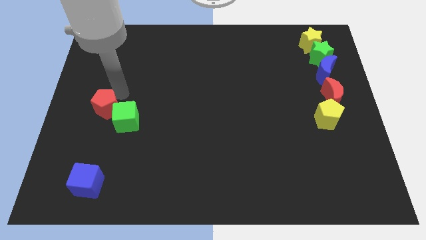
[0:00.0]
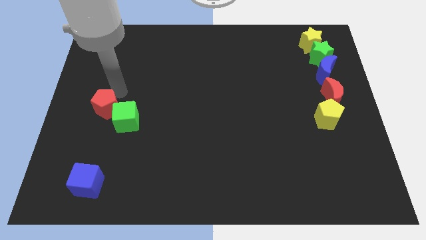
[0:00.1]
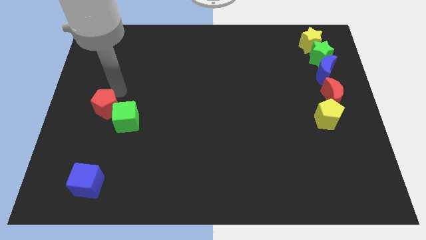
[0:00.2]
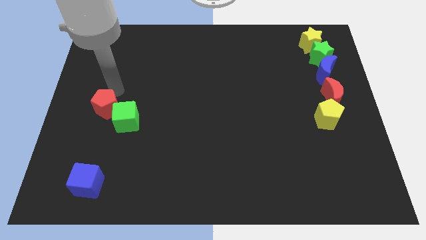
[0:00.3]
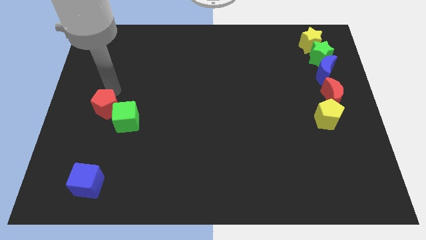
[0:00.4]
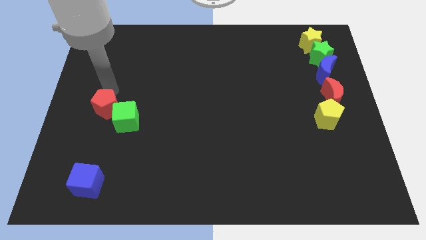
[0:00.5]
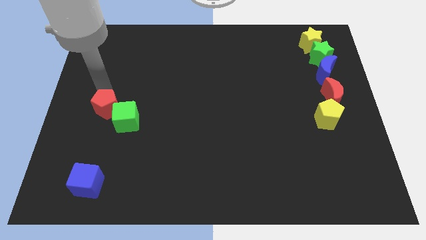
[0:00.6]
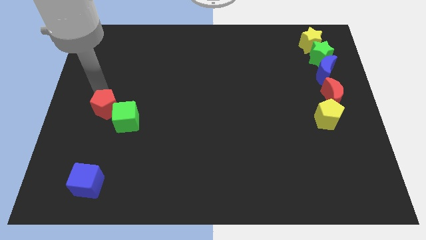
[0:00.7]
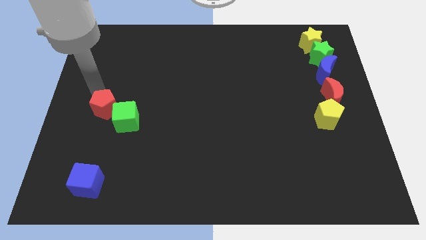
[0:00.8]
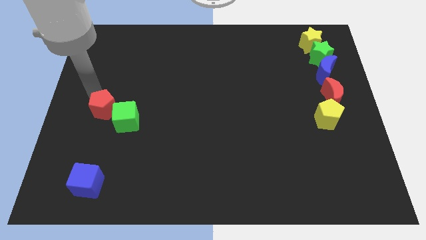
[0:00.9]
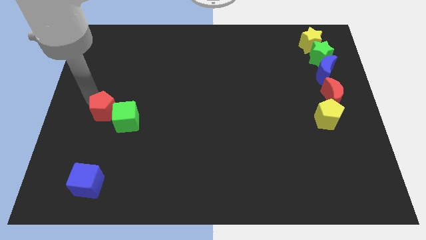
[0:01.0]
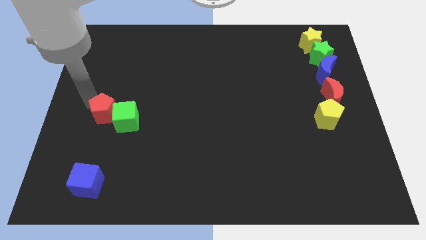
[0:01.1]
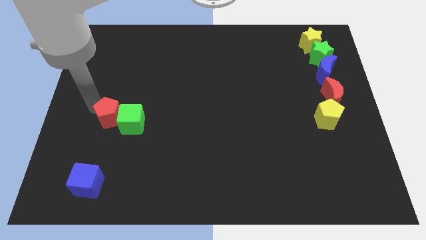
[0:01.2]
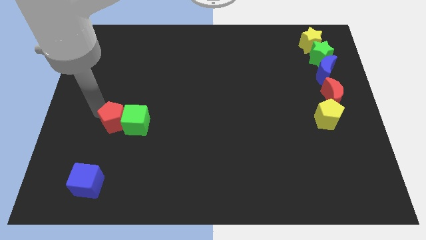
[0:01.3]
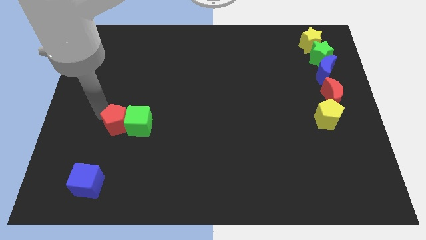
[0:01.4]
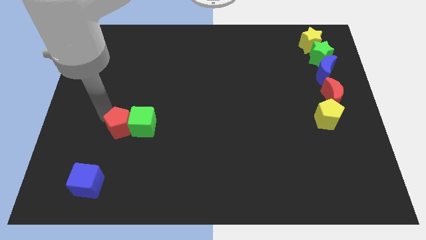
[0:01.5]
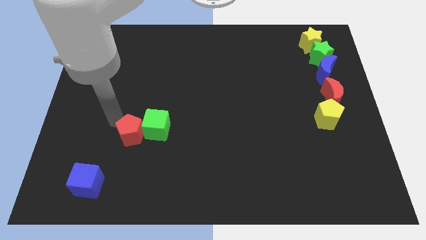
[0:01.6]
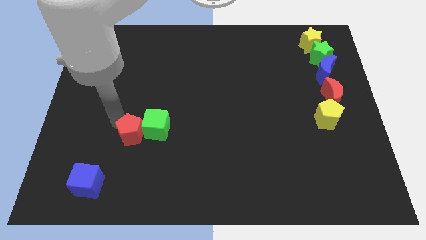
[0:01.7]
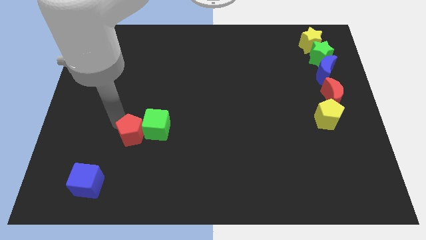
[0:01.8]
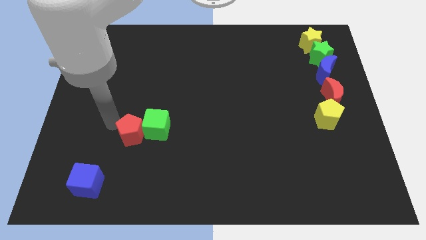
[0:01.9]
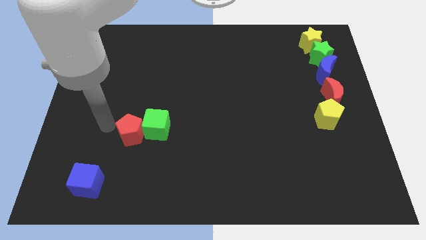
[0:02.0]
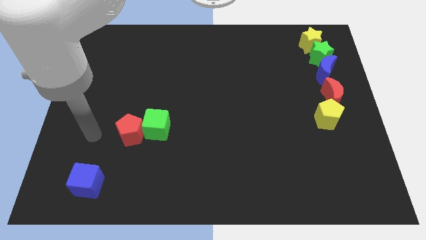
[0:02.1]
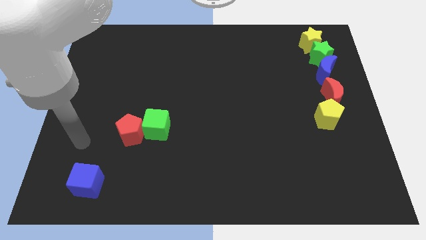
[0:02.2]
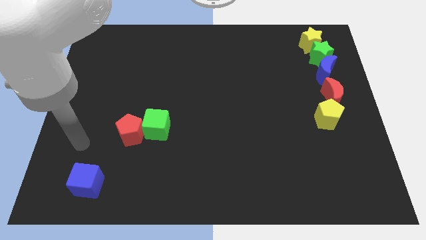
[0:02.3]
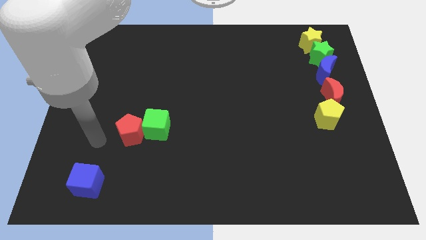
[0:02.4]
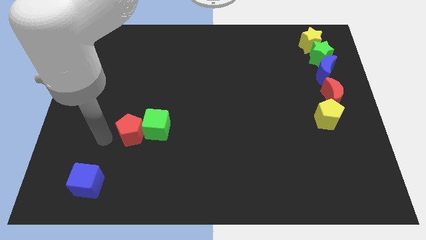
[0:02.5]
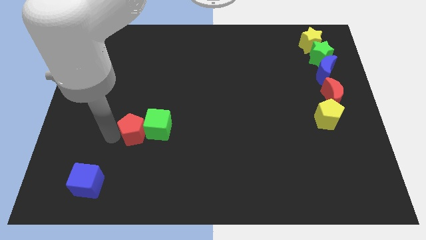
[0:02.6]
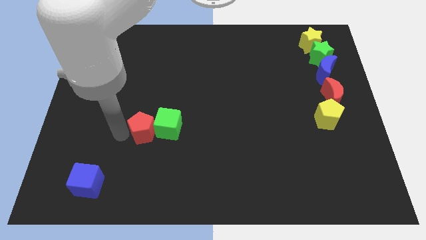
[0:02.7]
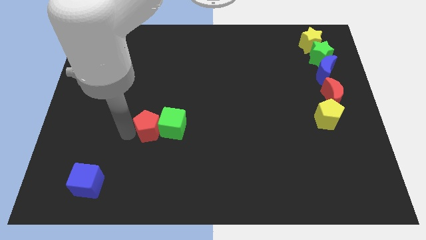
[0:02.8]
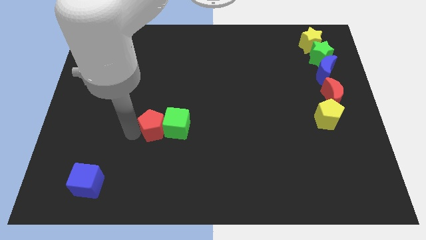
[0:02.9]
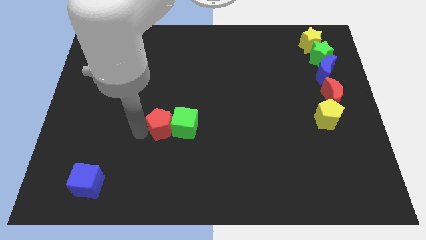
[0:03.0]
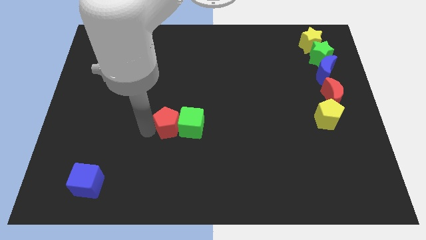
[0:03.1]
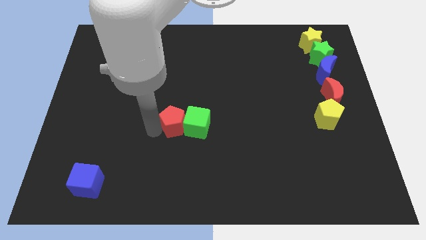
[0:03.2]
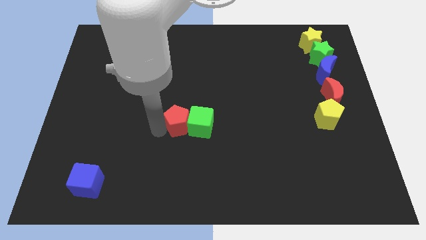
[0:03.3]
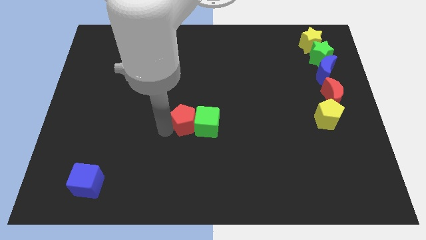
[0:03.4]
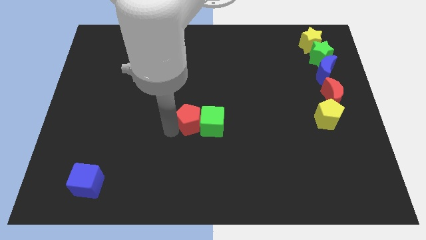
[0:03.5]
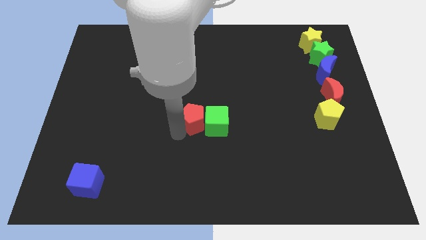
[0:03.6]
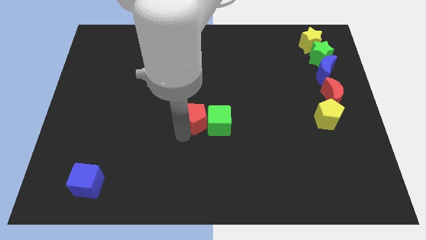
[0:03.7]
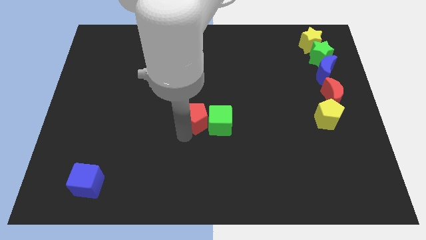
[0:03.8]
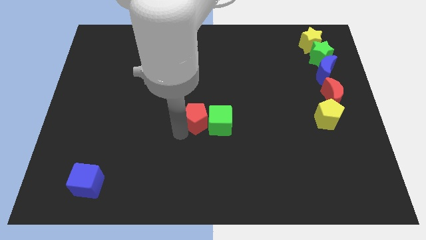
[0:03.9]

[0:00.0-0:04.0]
move the green cube with the red pentagon

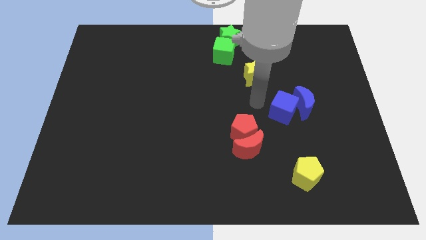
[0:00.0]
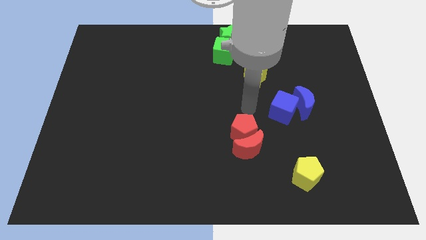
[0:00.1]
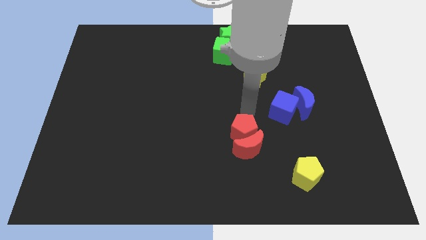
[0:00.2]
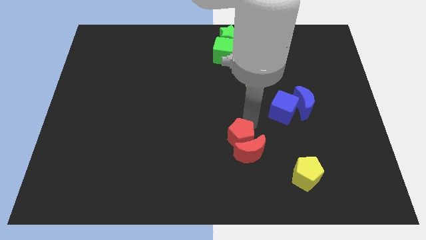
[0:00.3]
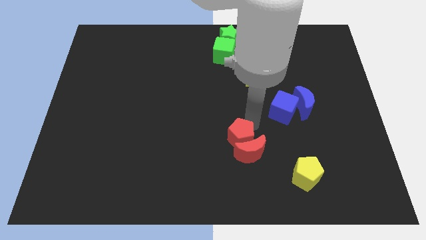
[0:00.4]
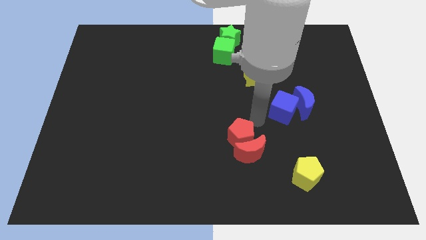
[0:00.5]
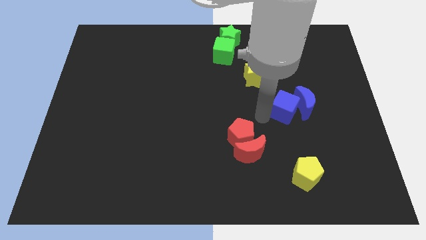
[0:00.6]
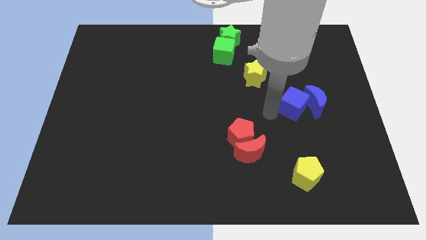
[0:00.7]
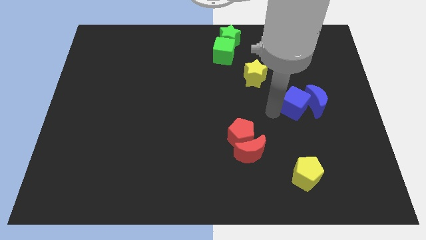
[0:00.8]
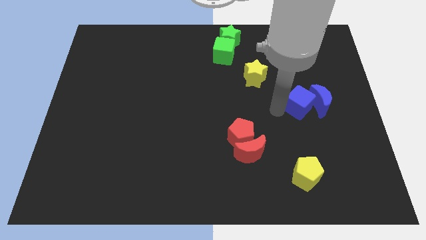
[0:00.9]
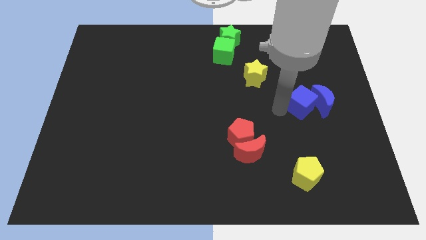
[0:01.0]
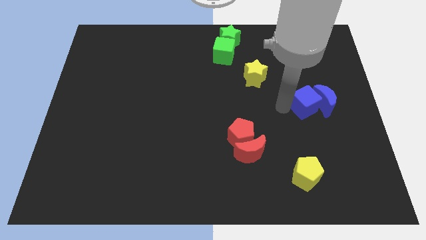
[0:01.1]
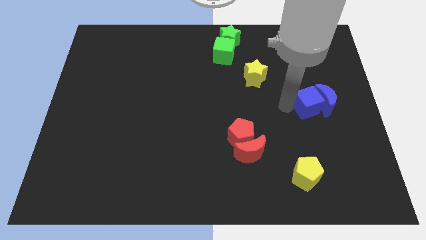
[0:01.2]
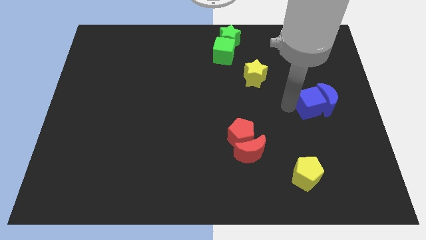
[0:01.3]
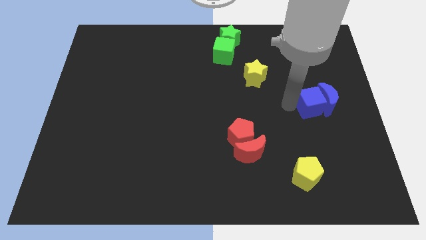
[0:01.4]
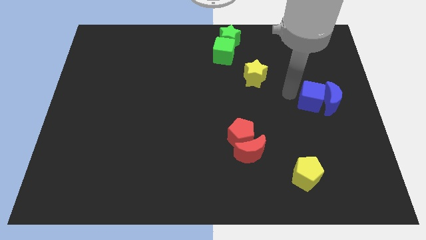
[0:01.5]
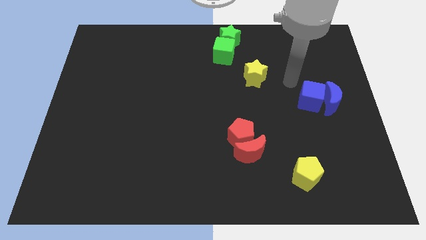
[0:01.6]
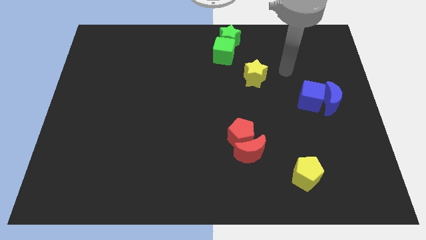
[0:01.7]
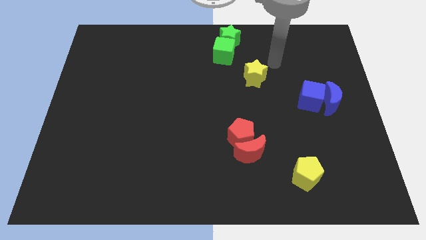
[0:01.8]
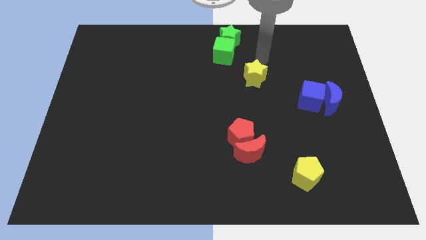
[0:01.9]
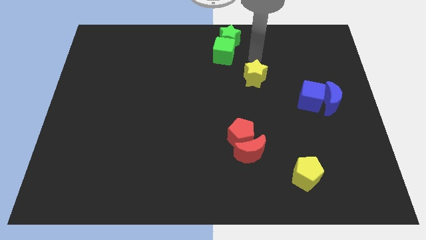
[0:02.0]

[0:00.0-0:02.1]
slide the blue blocks to the centre right of the board

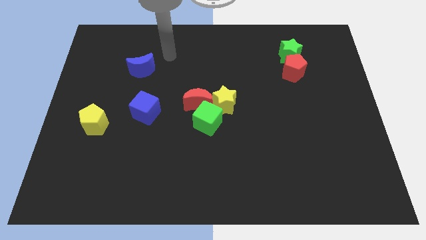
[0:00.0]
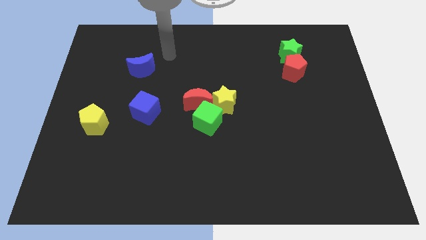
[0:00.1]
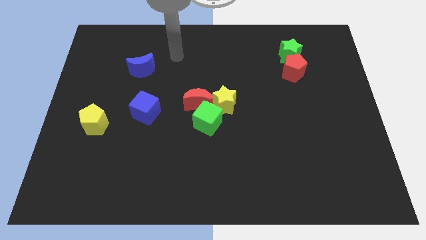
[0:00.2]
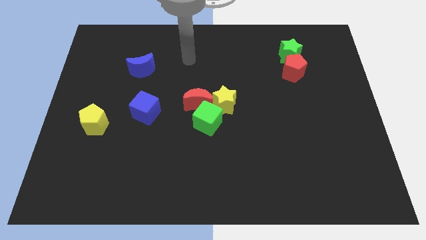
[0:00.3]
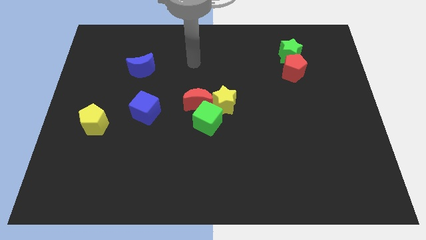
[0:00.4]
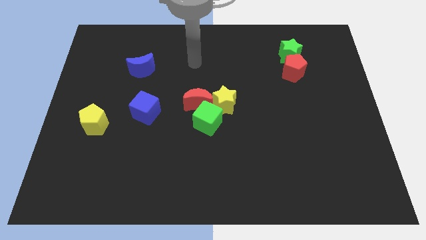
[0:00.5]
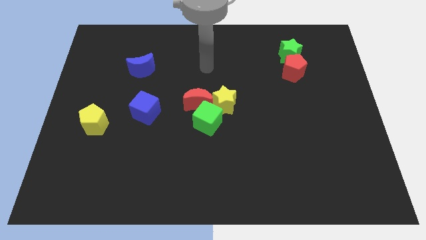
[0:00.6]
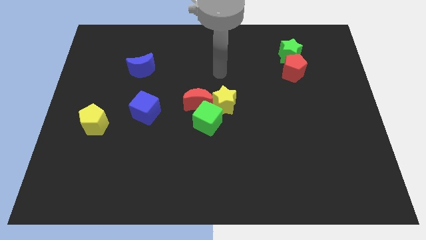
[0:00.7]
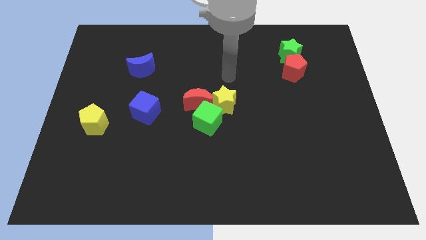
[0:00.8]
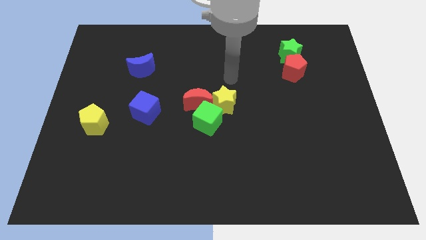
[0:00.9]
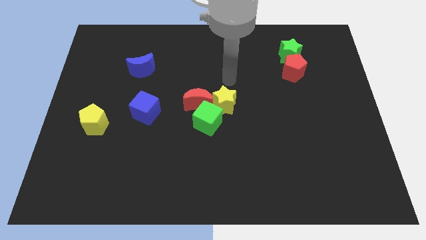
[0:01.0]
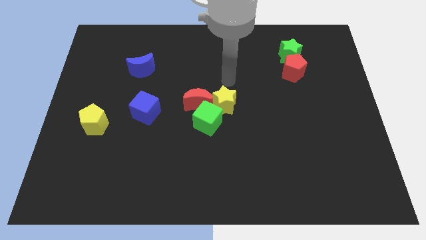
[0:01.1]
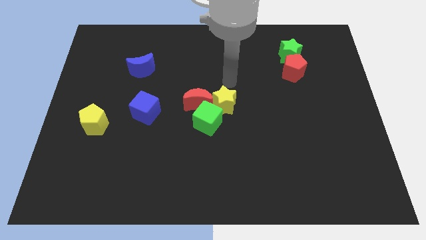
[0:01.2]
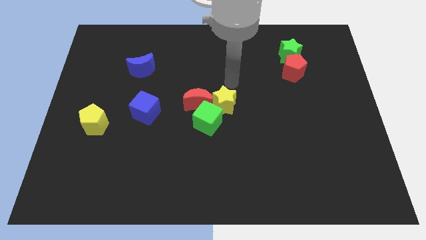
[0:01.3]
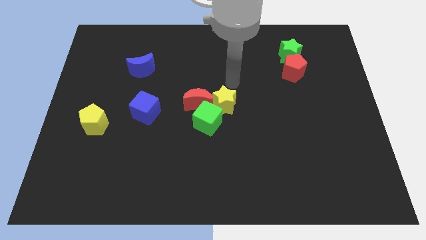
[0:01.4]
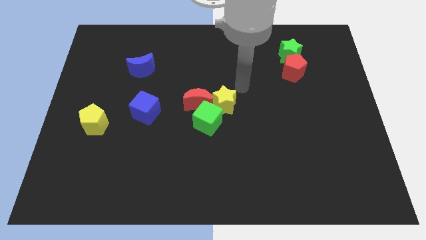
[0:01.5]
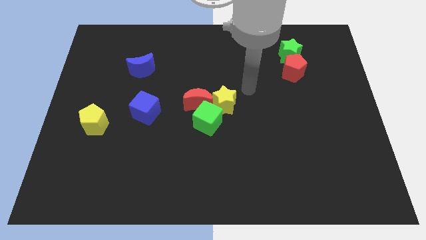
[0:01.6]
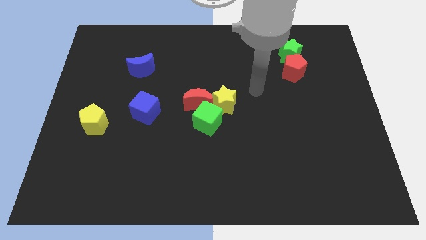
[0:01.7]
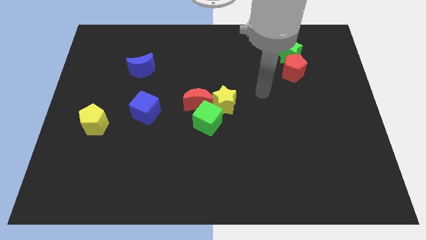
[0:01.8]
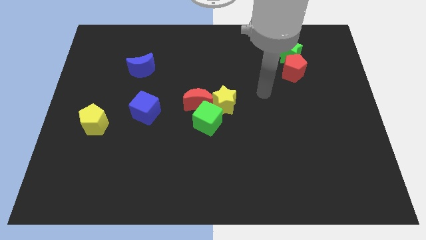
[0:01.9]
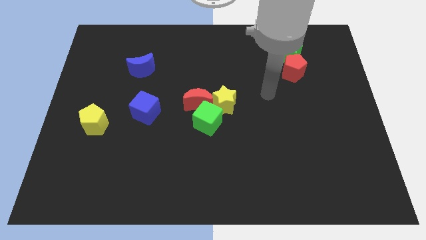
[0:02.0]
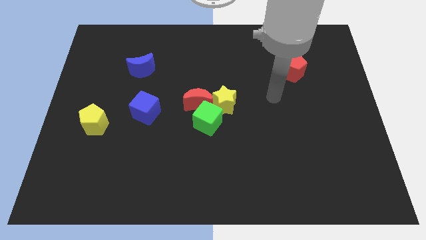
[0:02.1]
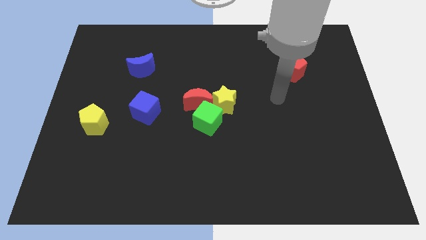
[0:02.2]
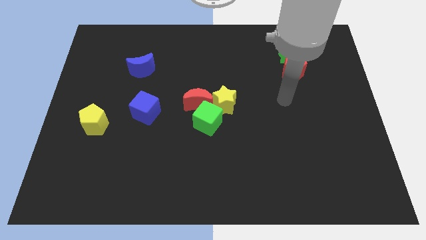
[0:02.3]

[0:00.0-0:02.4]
place the arm below the red pentagon

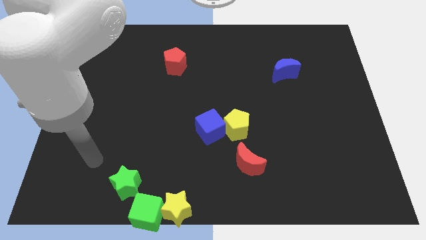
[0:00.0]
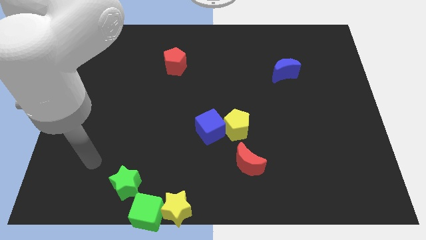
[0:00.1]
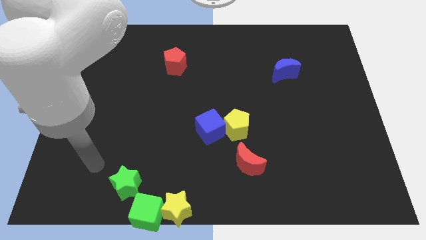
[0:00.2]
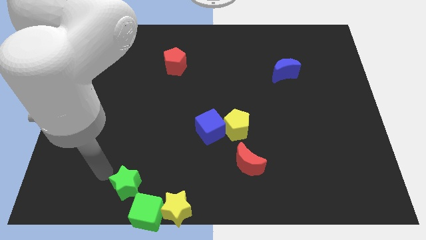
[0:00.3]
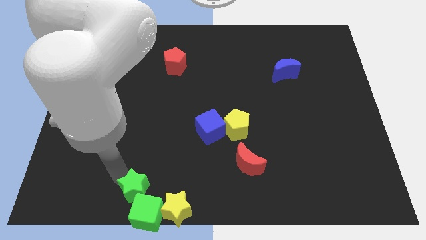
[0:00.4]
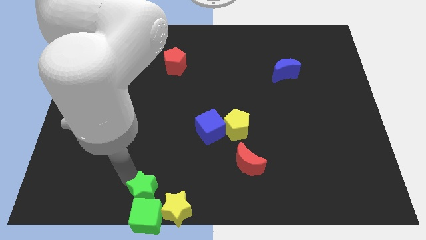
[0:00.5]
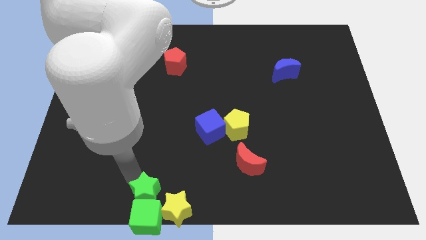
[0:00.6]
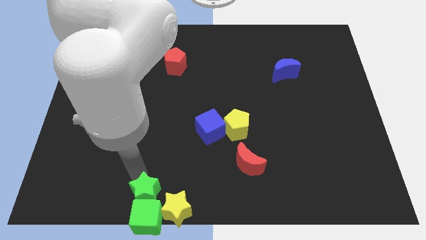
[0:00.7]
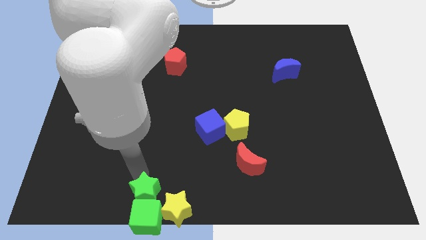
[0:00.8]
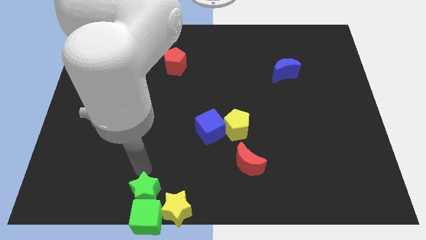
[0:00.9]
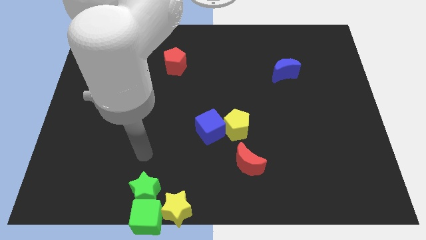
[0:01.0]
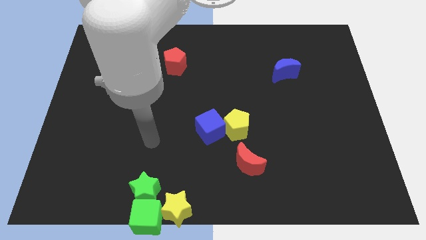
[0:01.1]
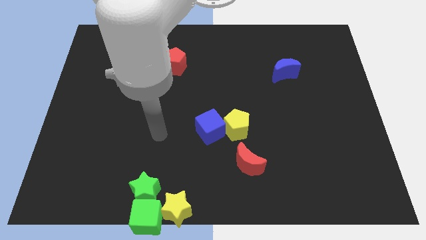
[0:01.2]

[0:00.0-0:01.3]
push the green star to the top of the green cube vertically
